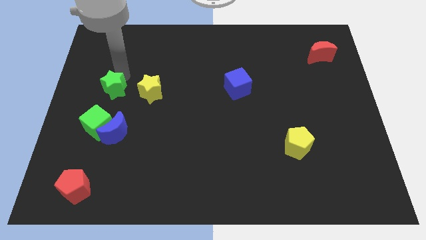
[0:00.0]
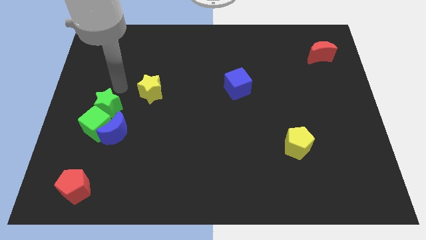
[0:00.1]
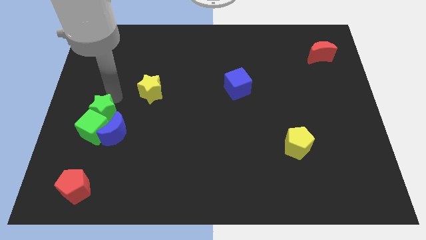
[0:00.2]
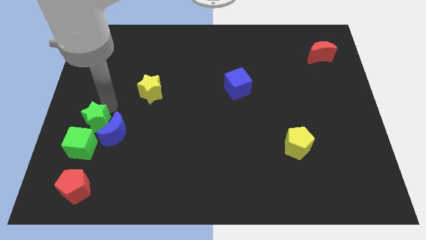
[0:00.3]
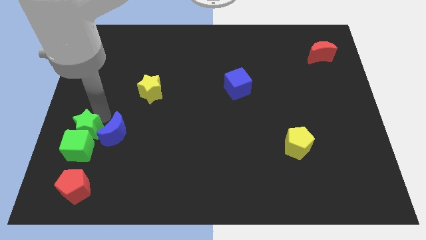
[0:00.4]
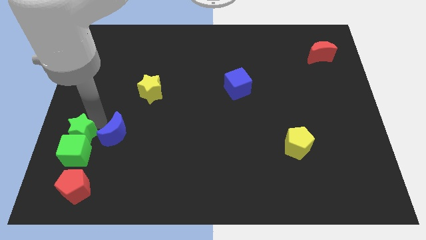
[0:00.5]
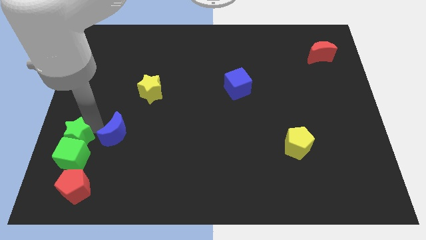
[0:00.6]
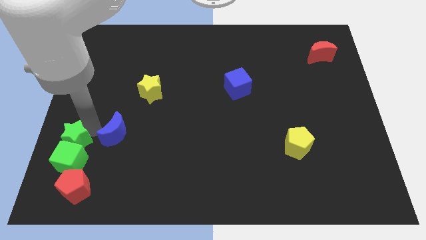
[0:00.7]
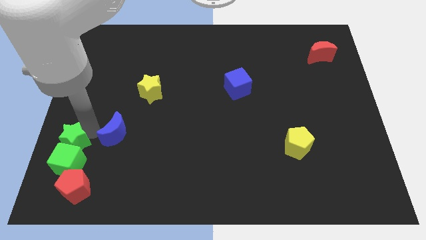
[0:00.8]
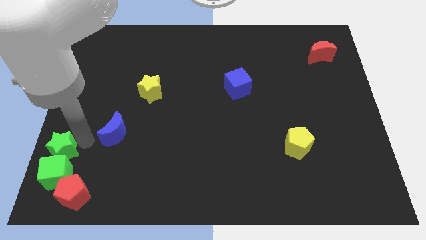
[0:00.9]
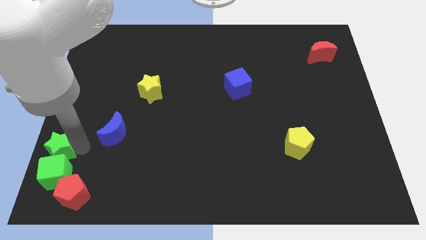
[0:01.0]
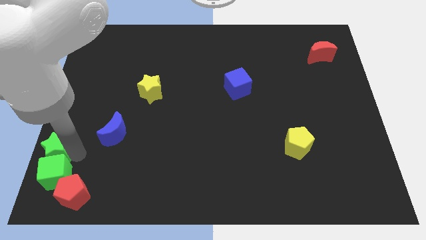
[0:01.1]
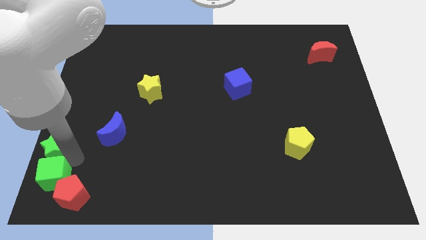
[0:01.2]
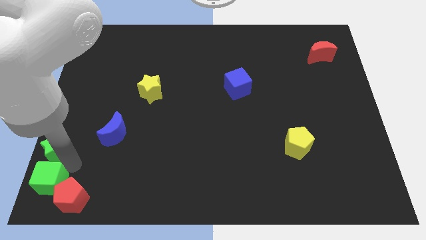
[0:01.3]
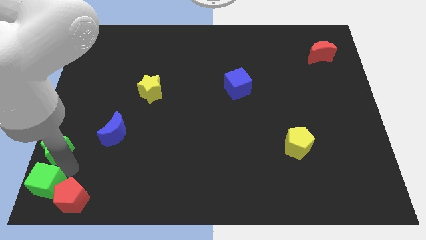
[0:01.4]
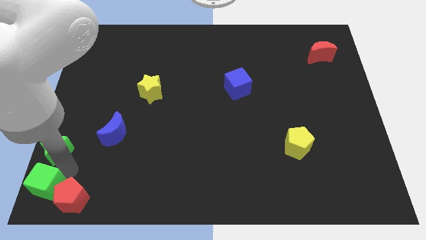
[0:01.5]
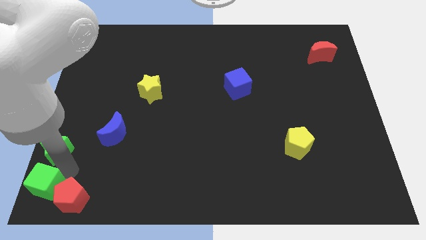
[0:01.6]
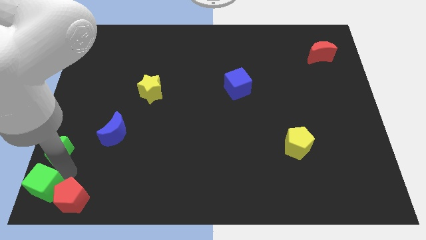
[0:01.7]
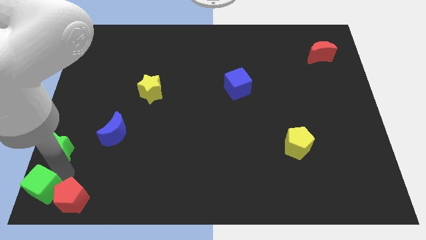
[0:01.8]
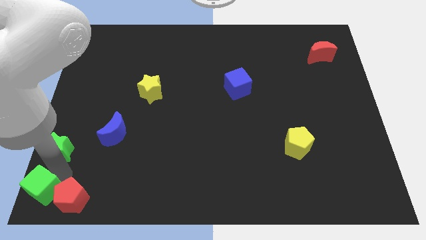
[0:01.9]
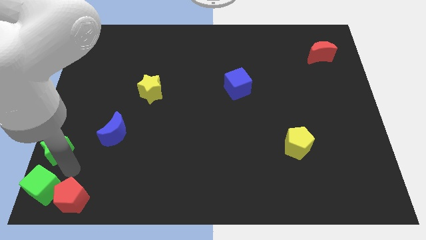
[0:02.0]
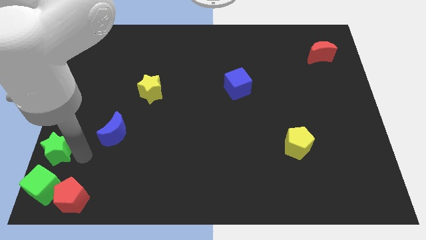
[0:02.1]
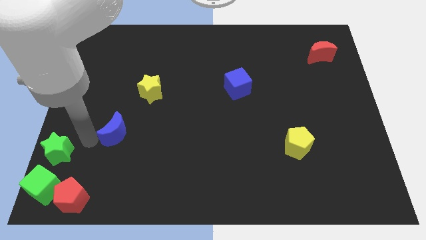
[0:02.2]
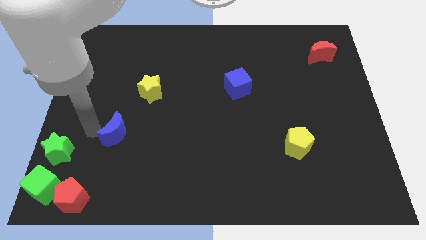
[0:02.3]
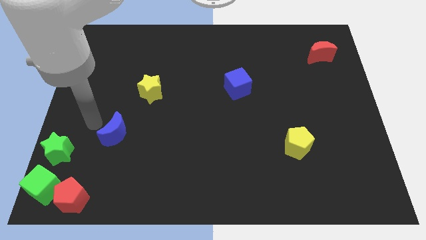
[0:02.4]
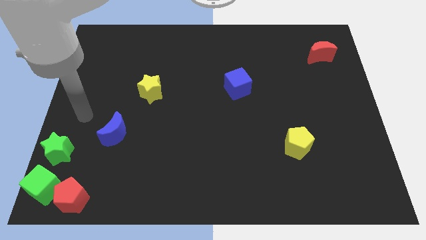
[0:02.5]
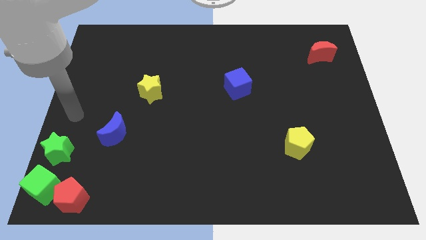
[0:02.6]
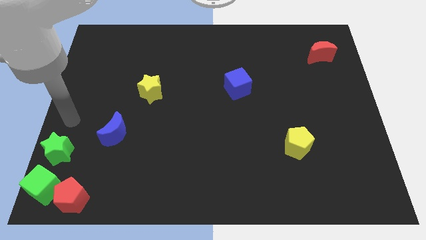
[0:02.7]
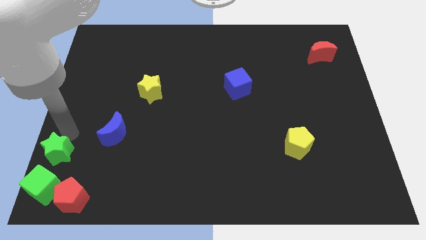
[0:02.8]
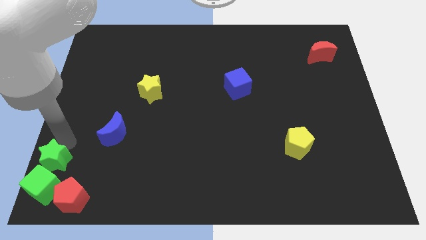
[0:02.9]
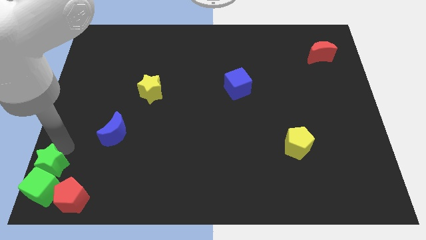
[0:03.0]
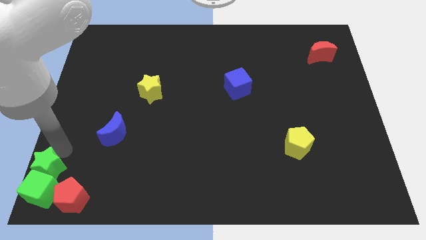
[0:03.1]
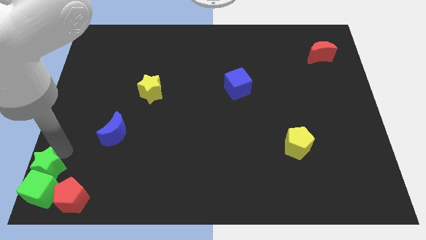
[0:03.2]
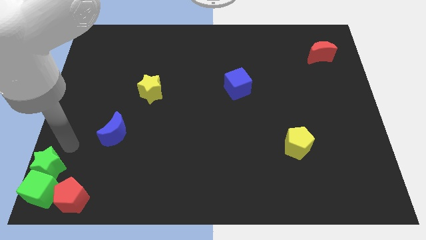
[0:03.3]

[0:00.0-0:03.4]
push the green blocks to the bottom left corner of the board

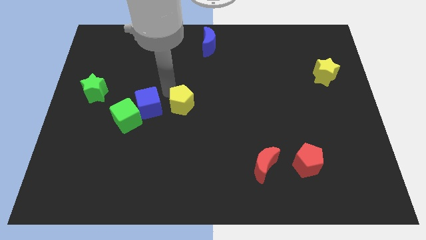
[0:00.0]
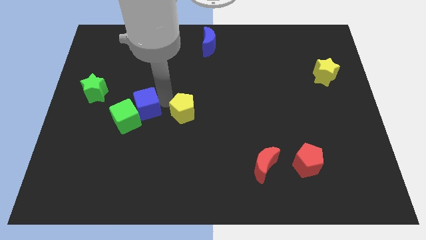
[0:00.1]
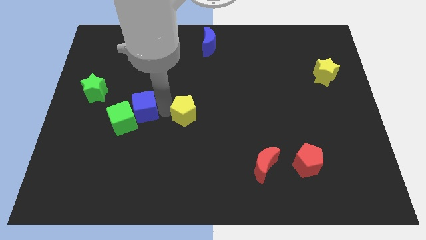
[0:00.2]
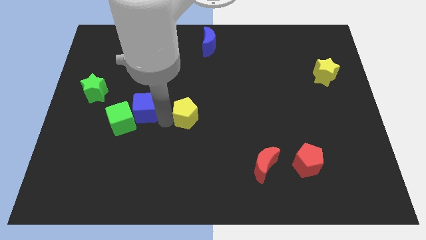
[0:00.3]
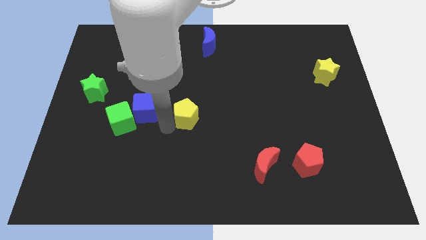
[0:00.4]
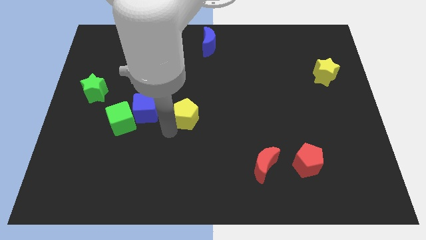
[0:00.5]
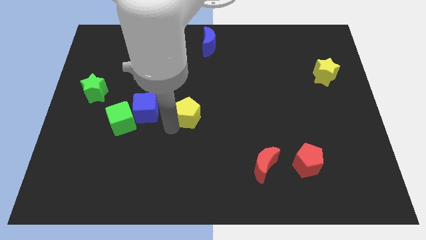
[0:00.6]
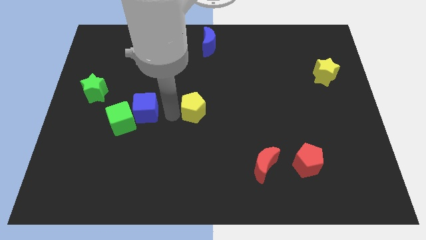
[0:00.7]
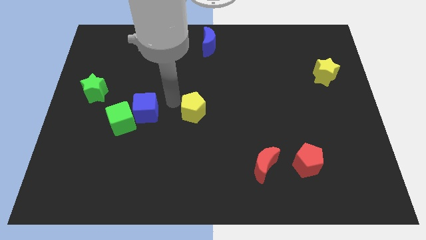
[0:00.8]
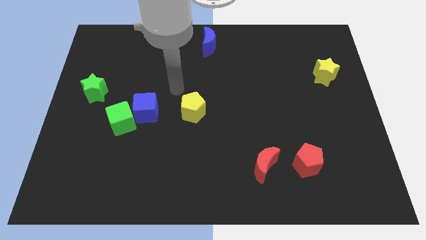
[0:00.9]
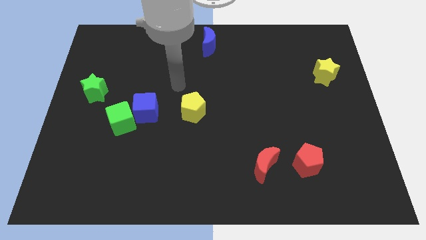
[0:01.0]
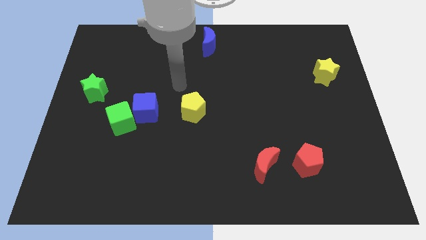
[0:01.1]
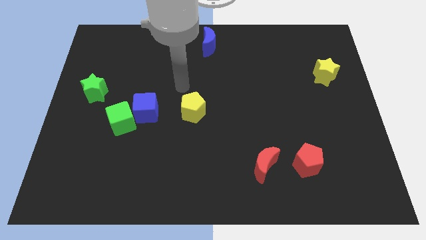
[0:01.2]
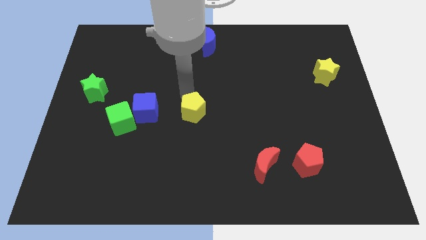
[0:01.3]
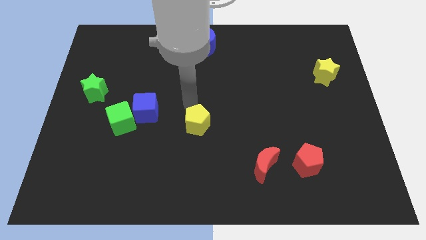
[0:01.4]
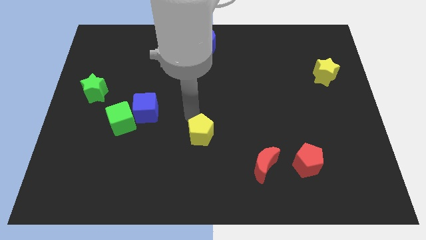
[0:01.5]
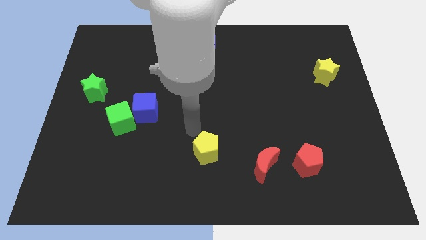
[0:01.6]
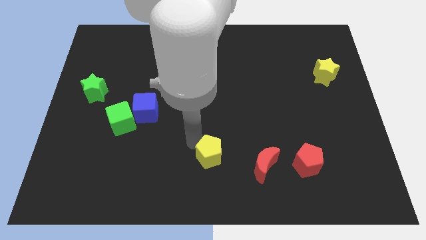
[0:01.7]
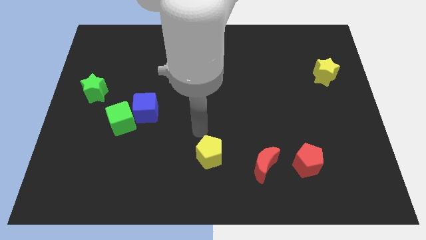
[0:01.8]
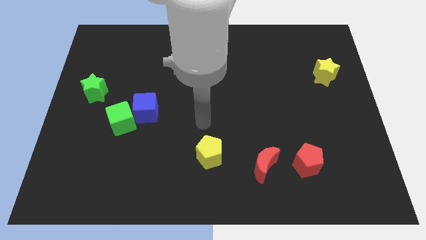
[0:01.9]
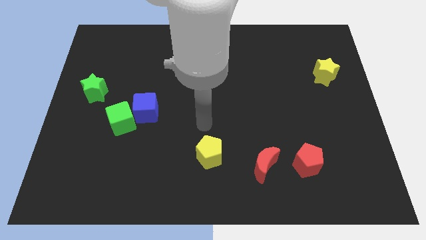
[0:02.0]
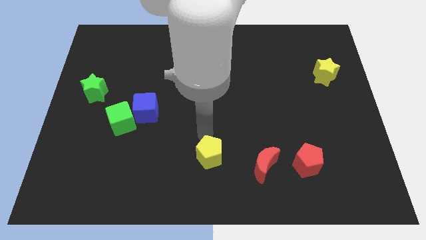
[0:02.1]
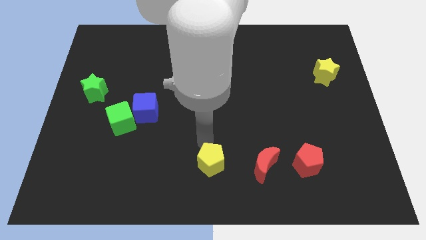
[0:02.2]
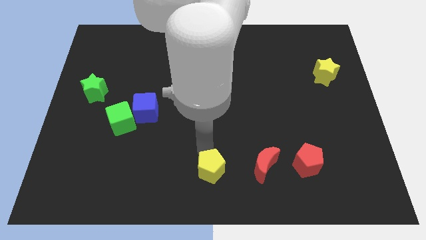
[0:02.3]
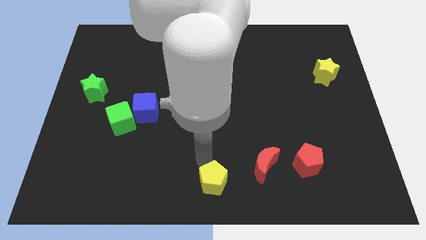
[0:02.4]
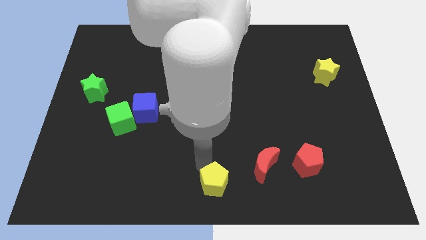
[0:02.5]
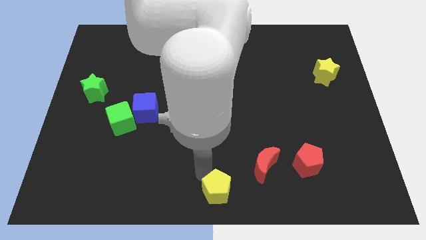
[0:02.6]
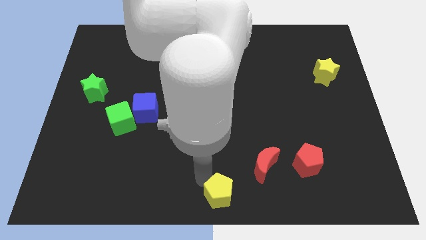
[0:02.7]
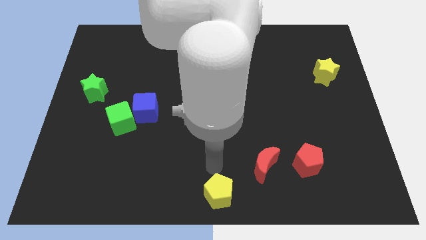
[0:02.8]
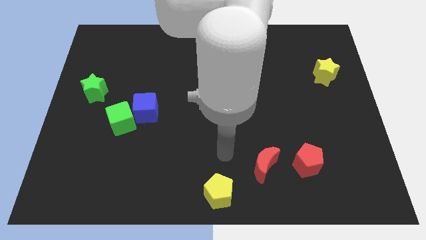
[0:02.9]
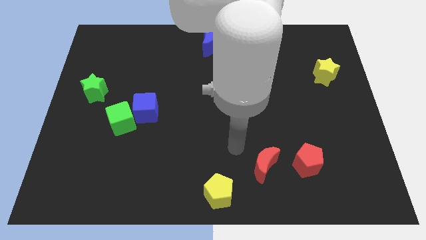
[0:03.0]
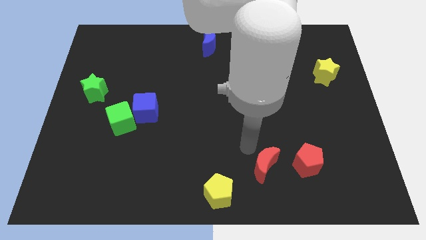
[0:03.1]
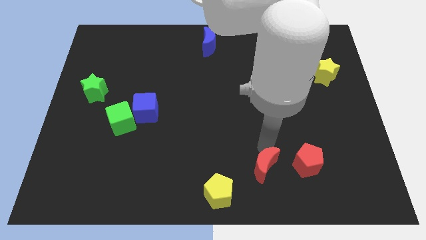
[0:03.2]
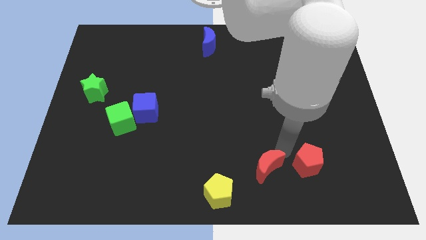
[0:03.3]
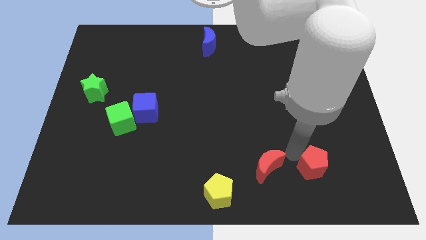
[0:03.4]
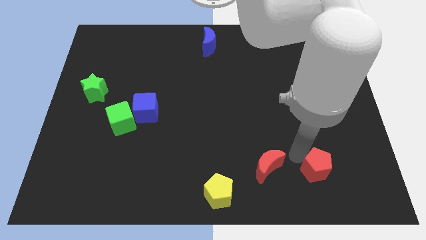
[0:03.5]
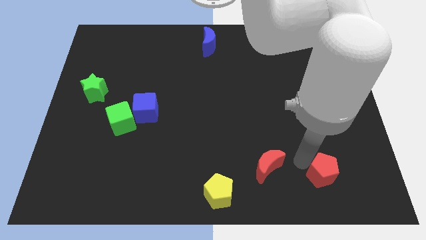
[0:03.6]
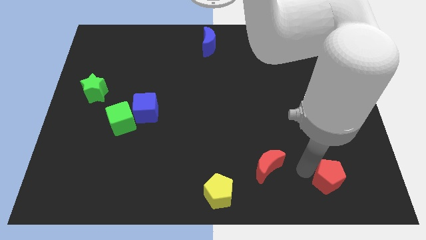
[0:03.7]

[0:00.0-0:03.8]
move yellow pentagon to bottom center

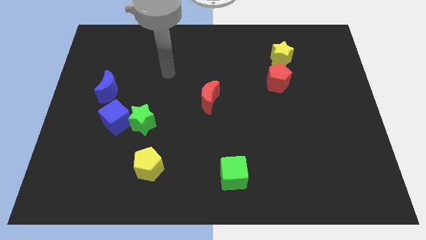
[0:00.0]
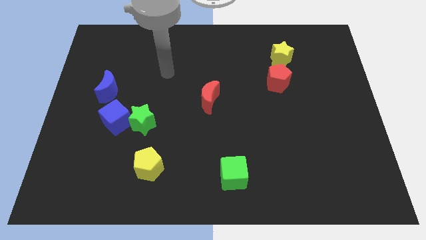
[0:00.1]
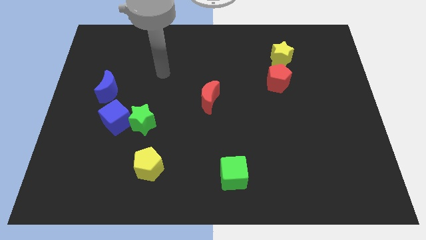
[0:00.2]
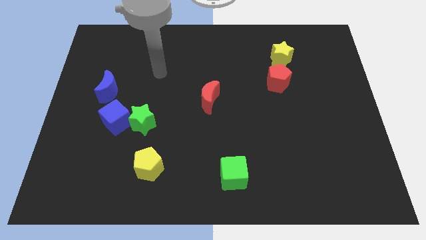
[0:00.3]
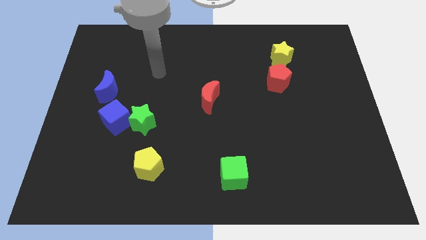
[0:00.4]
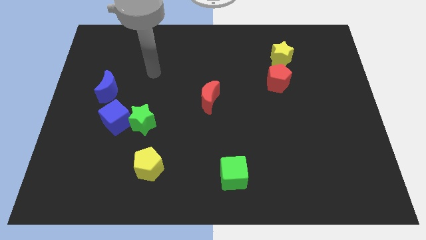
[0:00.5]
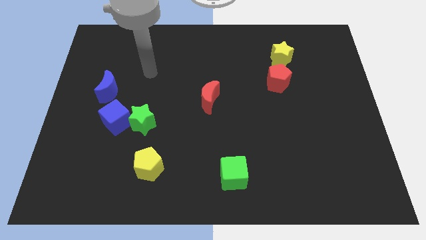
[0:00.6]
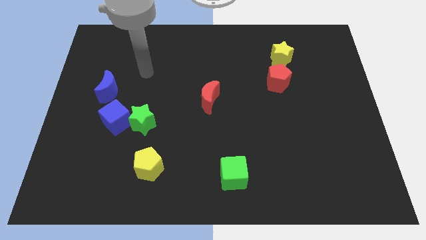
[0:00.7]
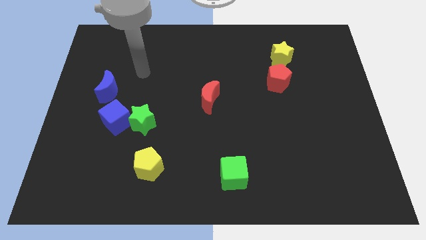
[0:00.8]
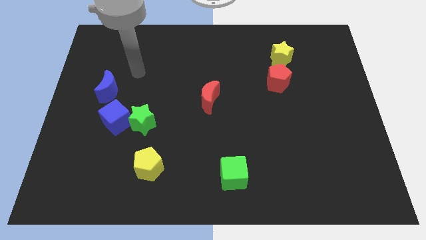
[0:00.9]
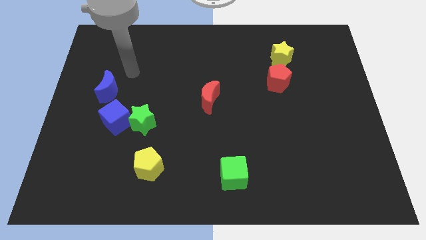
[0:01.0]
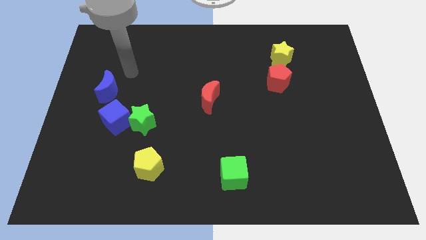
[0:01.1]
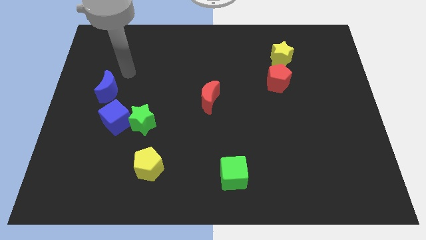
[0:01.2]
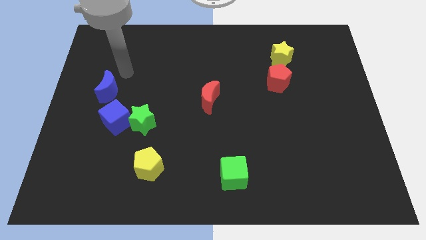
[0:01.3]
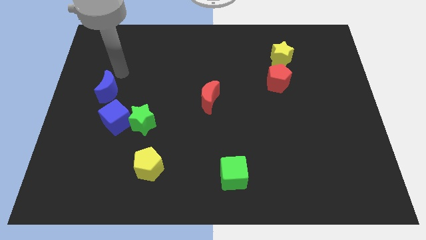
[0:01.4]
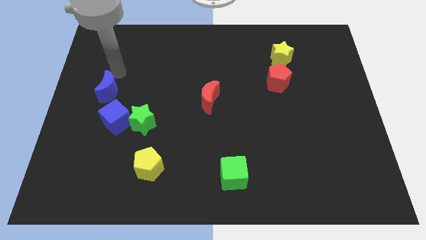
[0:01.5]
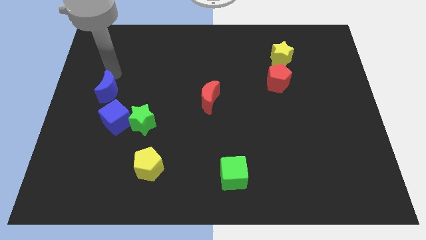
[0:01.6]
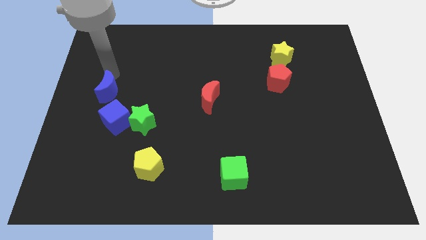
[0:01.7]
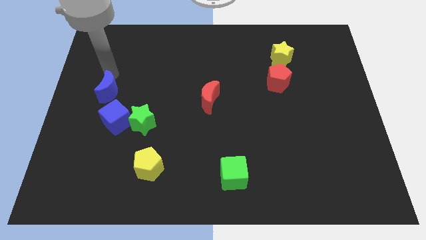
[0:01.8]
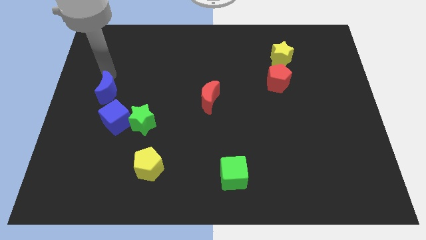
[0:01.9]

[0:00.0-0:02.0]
place your arm to the top of the blue moon
